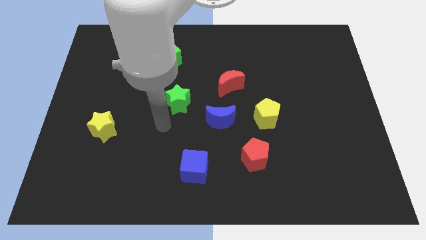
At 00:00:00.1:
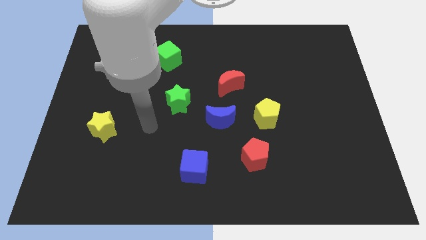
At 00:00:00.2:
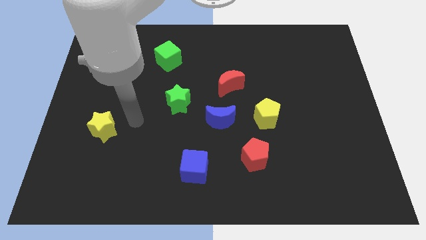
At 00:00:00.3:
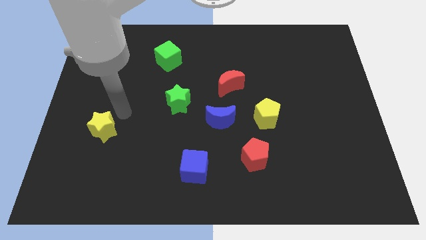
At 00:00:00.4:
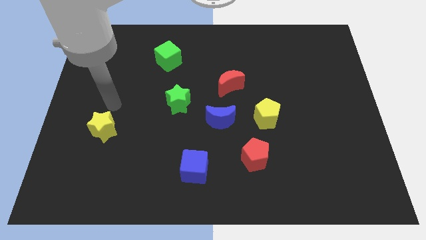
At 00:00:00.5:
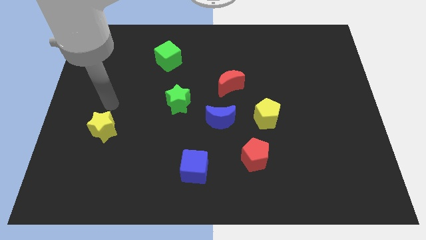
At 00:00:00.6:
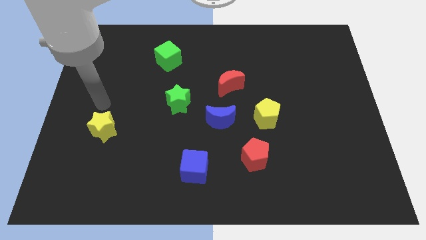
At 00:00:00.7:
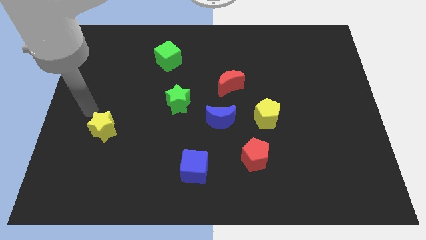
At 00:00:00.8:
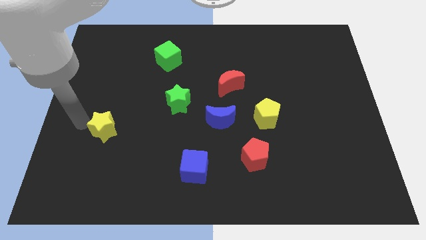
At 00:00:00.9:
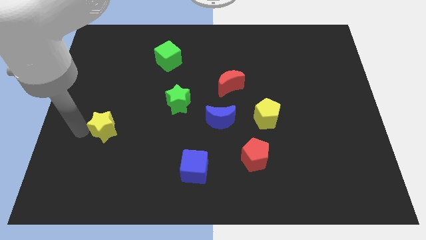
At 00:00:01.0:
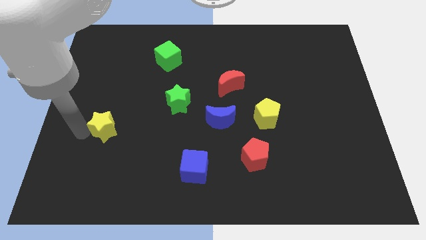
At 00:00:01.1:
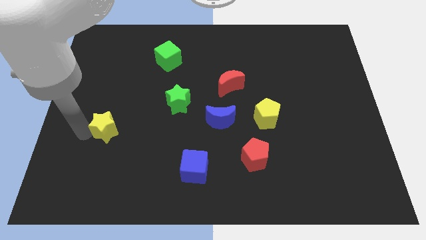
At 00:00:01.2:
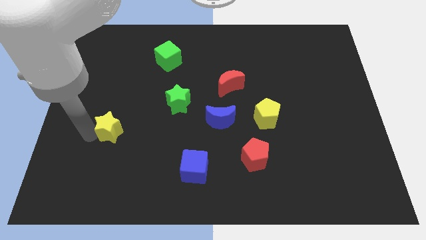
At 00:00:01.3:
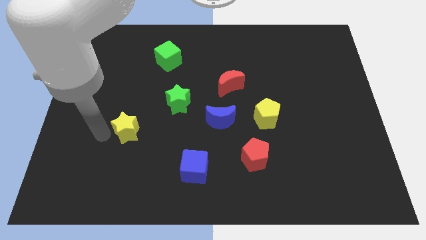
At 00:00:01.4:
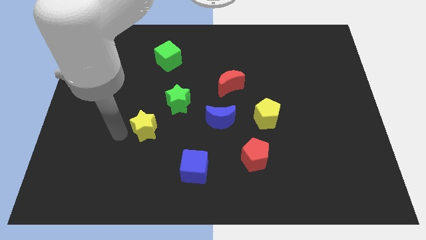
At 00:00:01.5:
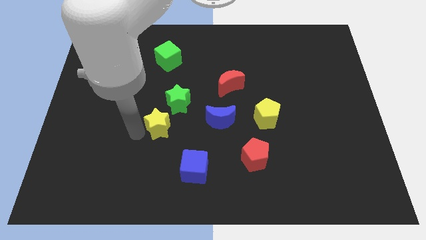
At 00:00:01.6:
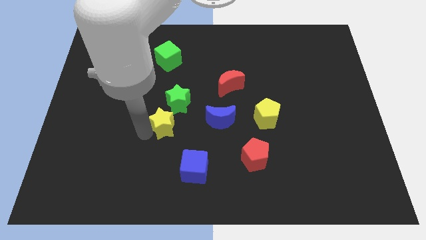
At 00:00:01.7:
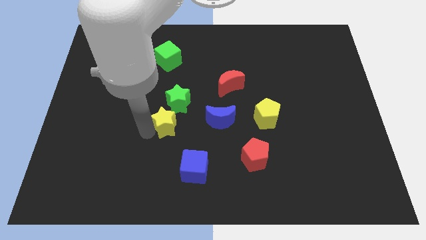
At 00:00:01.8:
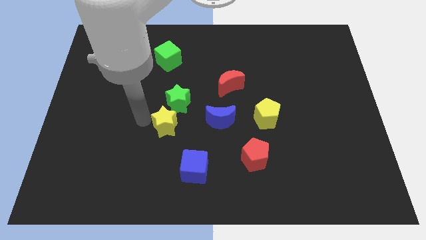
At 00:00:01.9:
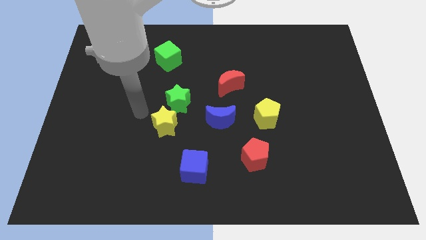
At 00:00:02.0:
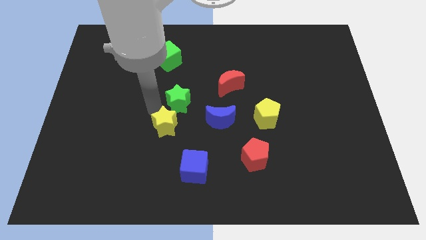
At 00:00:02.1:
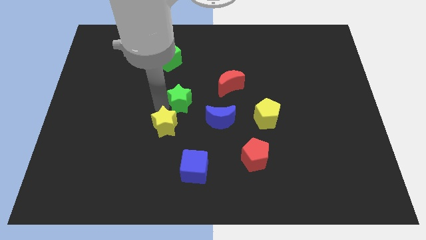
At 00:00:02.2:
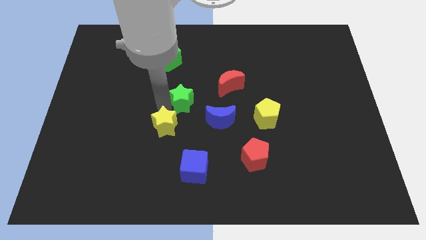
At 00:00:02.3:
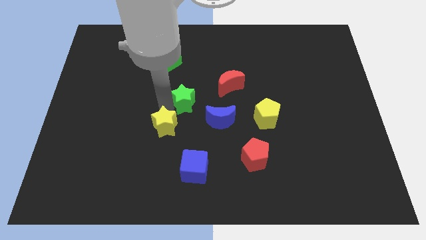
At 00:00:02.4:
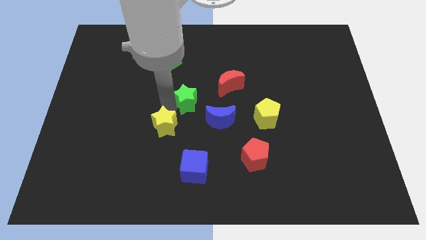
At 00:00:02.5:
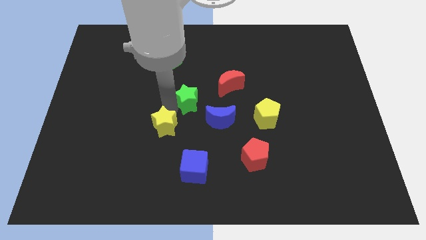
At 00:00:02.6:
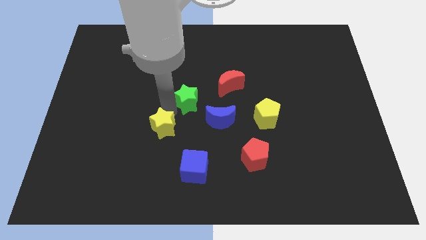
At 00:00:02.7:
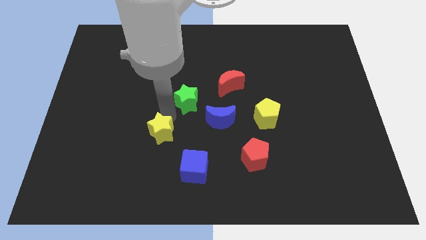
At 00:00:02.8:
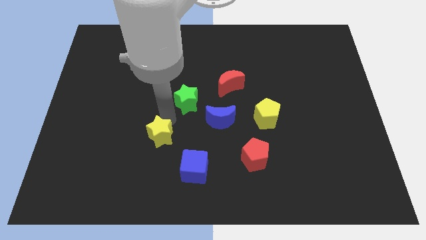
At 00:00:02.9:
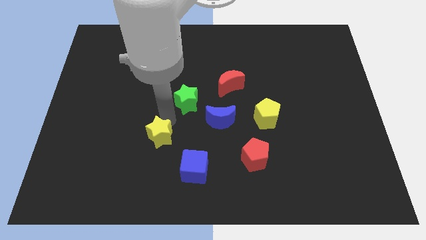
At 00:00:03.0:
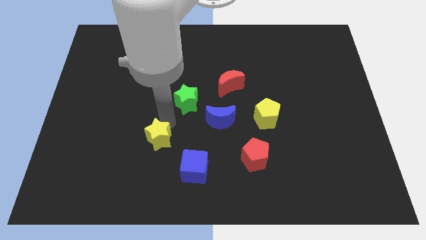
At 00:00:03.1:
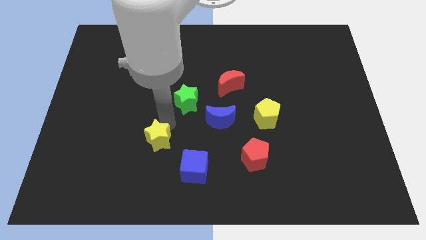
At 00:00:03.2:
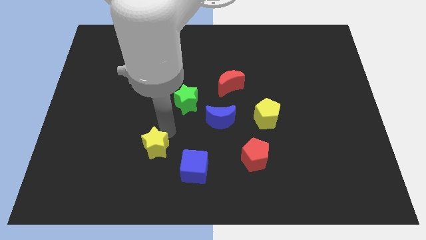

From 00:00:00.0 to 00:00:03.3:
place the yellow star towards the bottom left side of the green star

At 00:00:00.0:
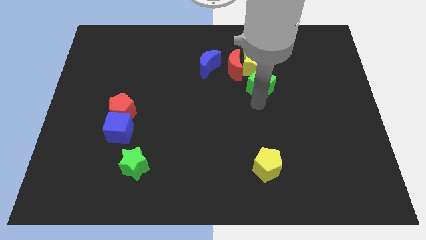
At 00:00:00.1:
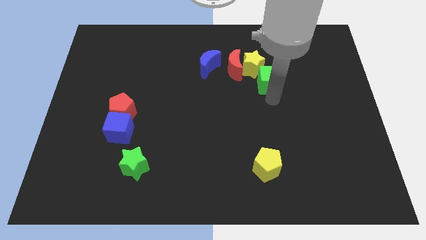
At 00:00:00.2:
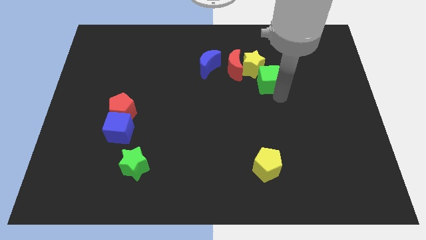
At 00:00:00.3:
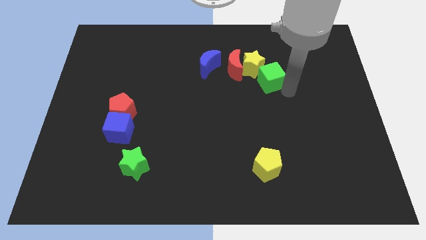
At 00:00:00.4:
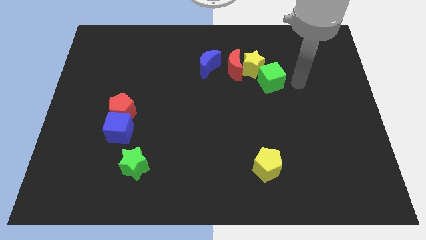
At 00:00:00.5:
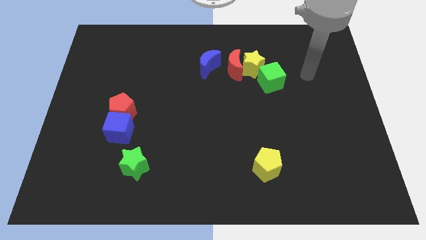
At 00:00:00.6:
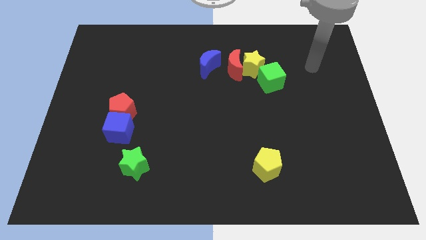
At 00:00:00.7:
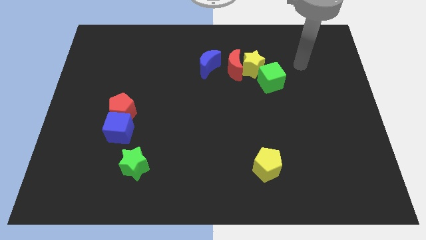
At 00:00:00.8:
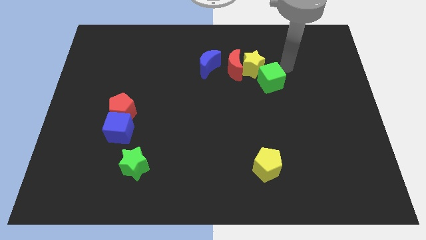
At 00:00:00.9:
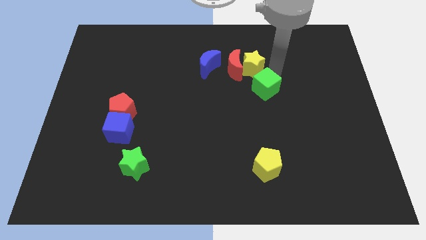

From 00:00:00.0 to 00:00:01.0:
push the green cube to the bottom right of the yellow star

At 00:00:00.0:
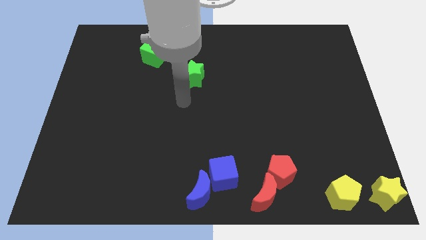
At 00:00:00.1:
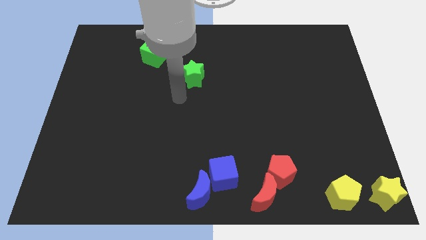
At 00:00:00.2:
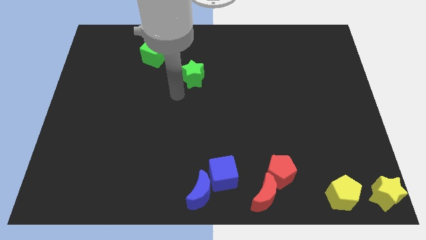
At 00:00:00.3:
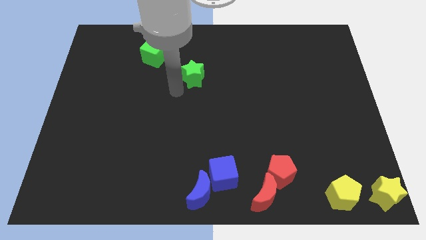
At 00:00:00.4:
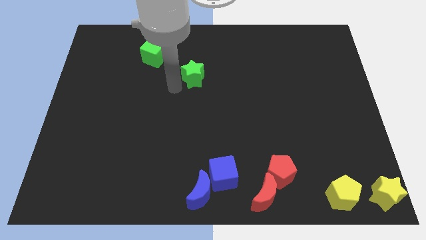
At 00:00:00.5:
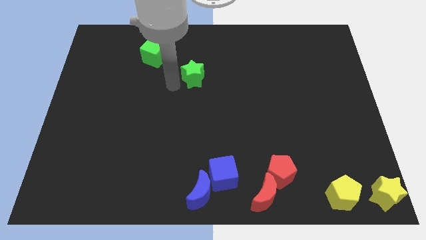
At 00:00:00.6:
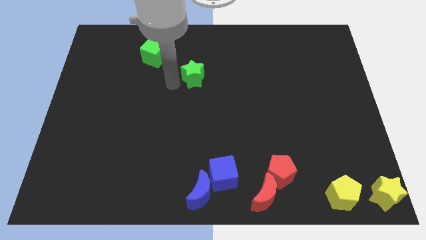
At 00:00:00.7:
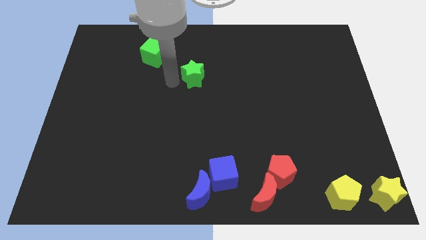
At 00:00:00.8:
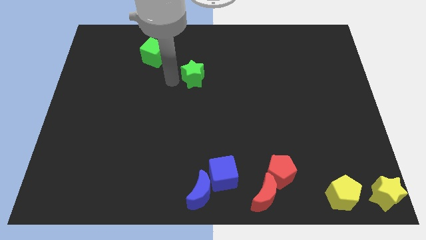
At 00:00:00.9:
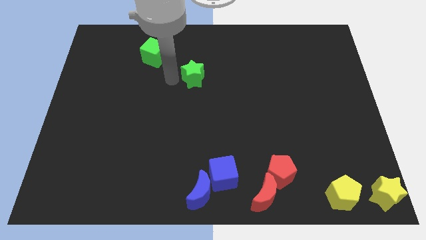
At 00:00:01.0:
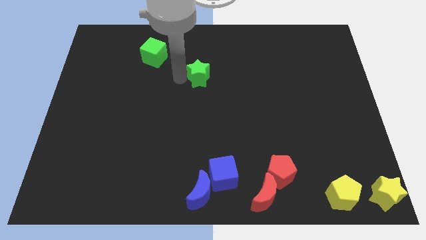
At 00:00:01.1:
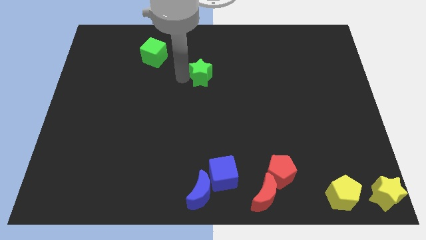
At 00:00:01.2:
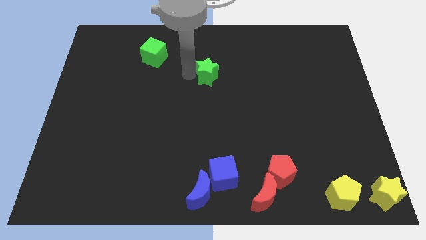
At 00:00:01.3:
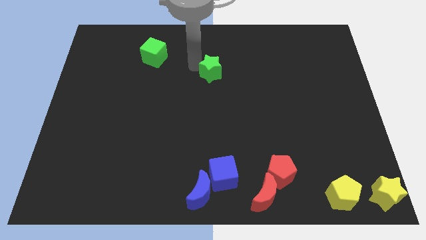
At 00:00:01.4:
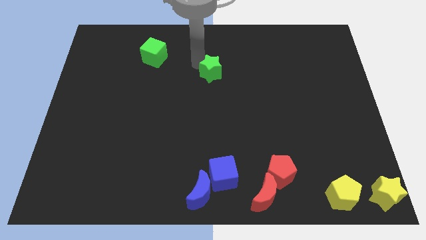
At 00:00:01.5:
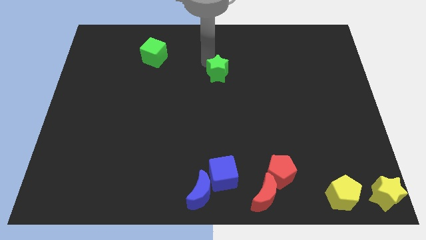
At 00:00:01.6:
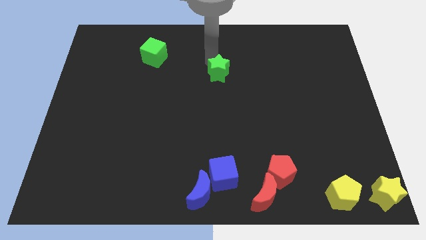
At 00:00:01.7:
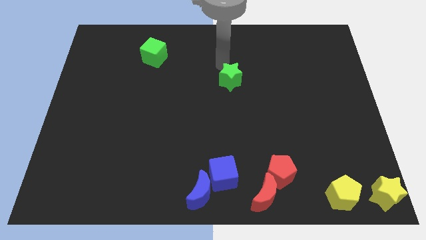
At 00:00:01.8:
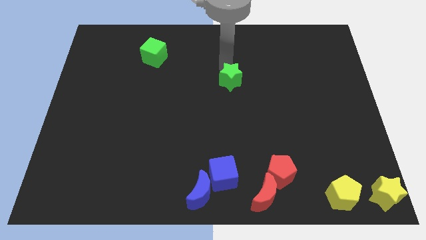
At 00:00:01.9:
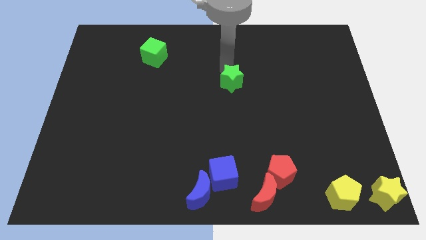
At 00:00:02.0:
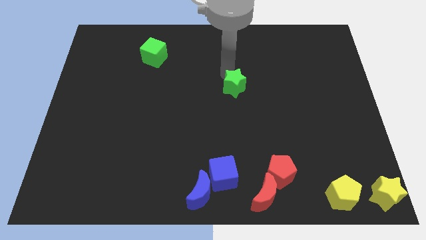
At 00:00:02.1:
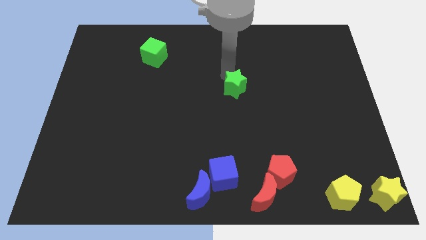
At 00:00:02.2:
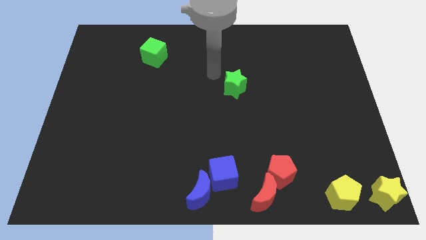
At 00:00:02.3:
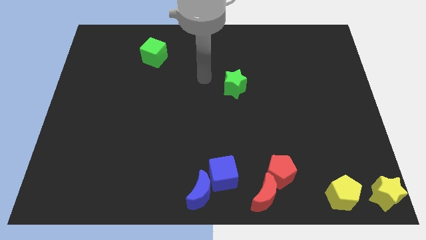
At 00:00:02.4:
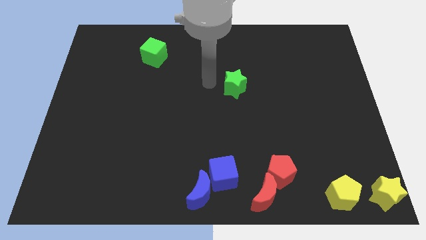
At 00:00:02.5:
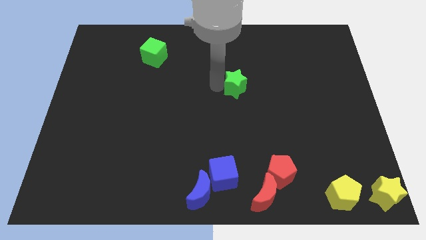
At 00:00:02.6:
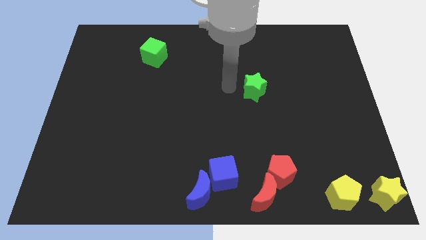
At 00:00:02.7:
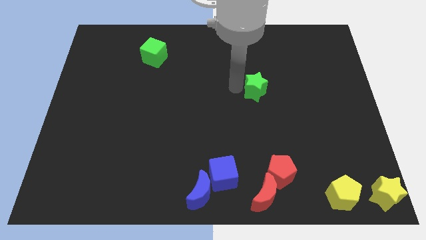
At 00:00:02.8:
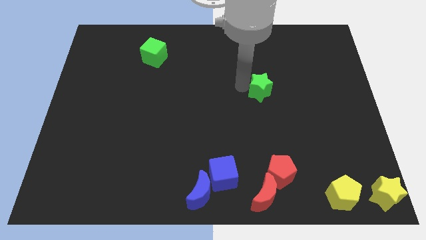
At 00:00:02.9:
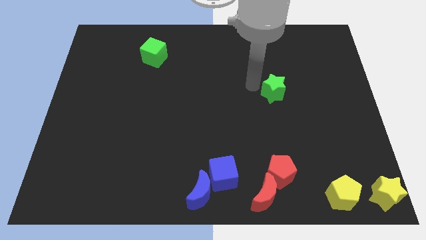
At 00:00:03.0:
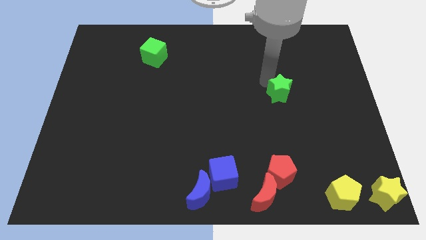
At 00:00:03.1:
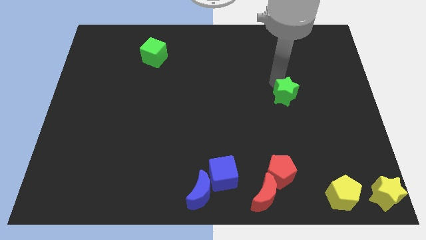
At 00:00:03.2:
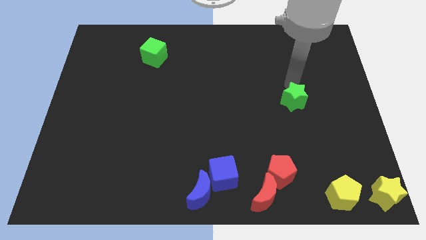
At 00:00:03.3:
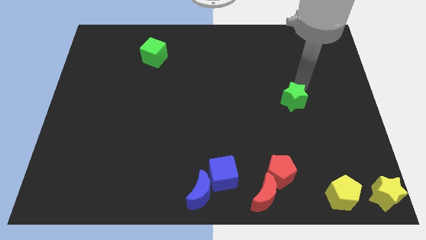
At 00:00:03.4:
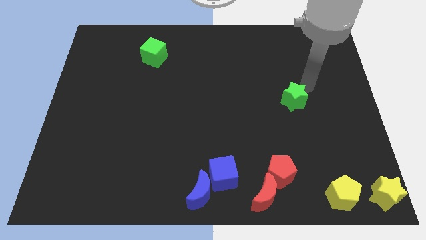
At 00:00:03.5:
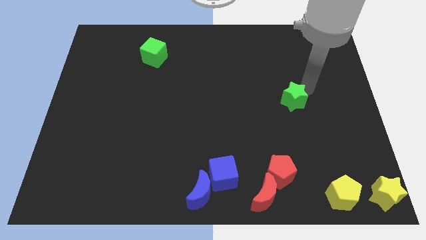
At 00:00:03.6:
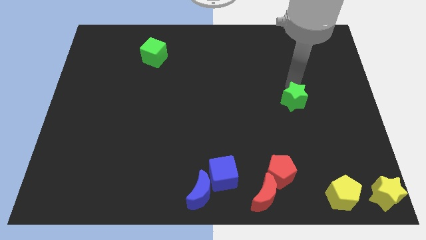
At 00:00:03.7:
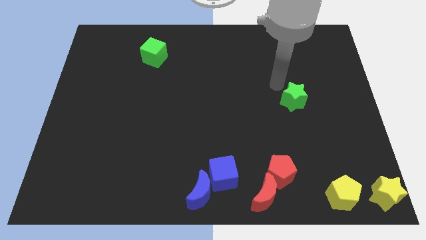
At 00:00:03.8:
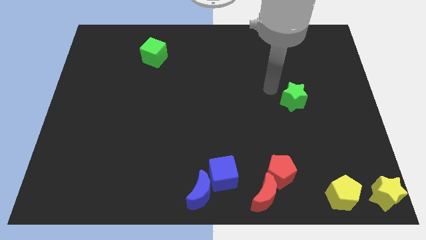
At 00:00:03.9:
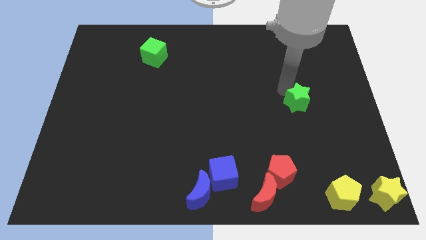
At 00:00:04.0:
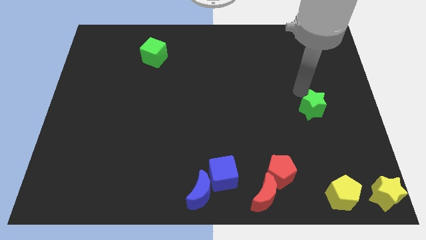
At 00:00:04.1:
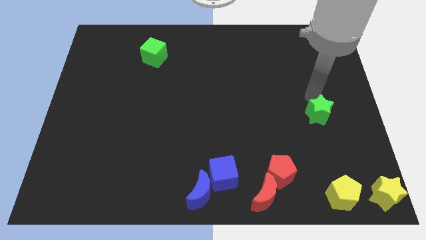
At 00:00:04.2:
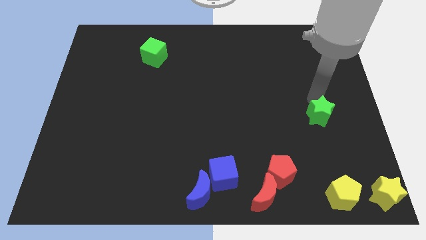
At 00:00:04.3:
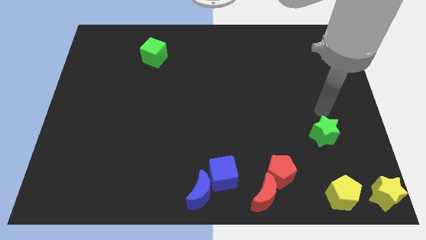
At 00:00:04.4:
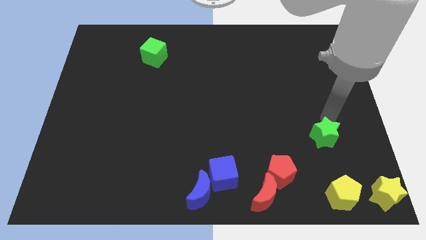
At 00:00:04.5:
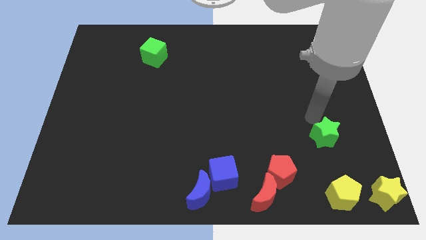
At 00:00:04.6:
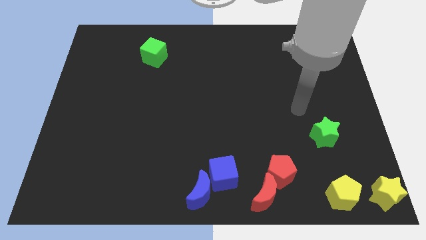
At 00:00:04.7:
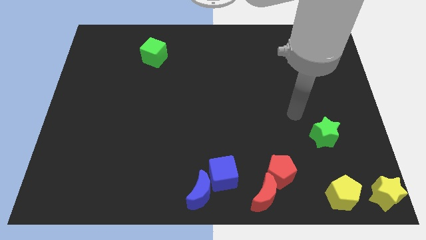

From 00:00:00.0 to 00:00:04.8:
move the green star to the vertical top of the yellow pentagon
